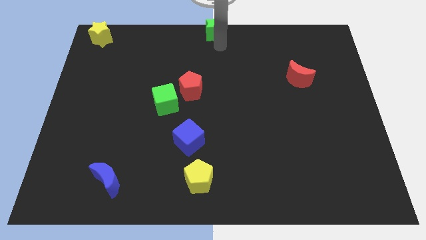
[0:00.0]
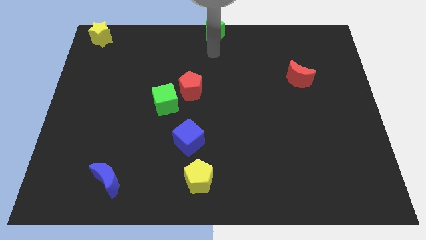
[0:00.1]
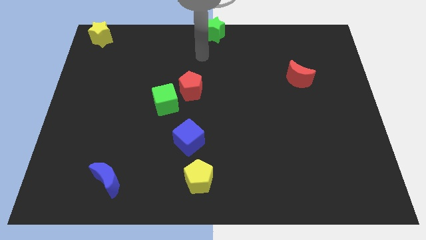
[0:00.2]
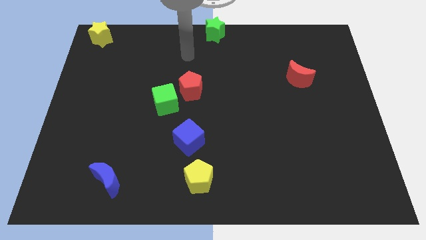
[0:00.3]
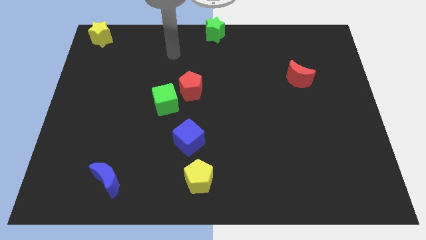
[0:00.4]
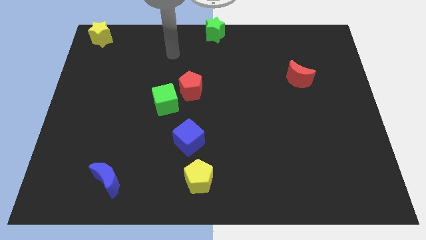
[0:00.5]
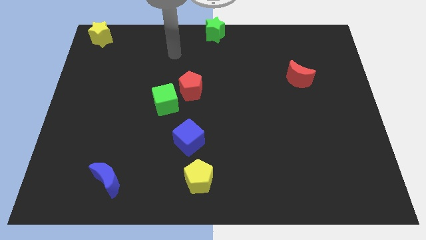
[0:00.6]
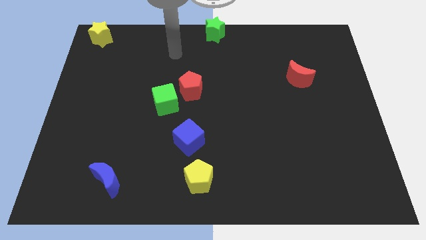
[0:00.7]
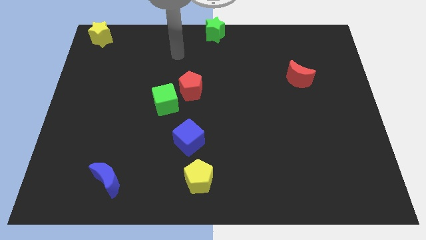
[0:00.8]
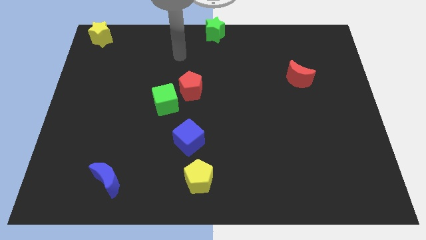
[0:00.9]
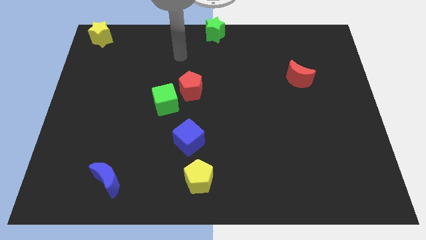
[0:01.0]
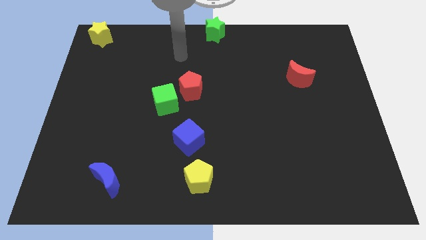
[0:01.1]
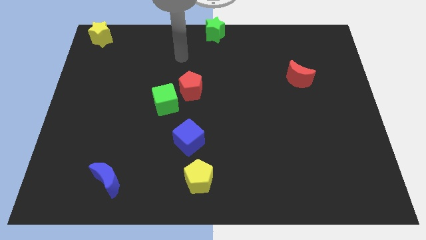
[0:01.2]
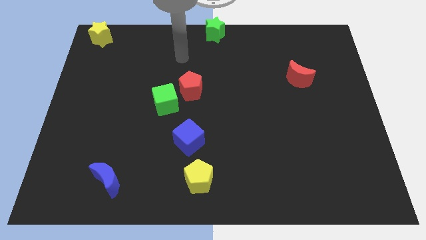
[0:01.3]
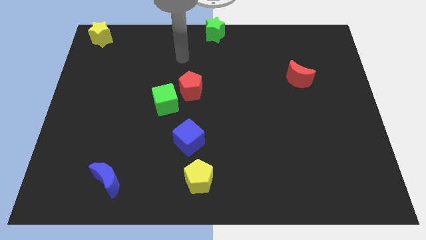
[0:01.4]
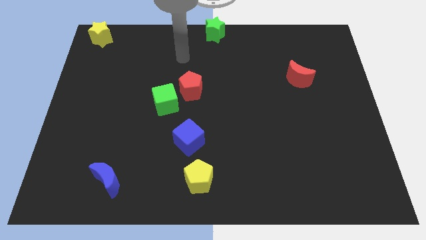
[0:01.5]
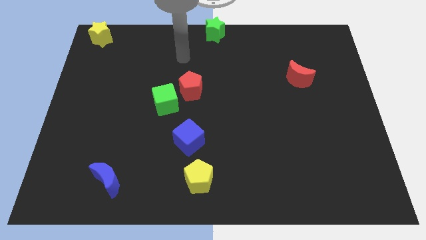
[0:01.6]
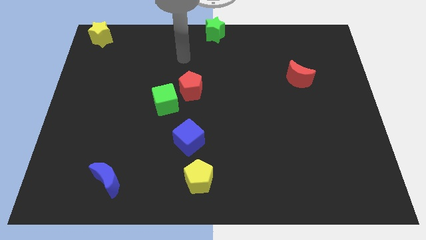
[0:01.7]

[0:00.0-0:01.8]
move your arm away from the green star

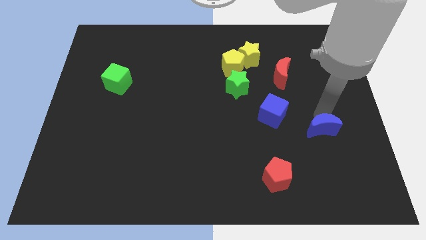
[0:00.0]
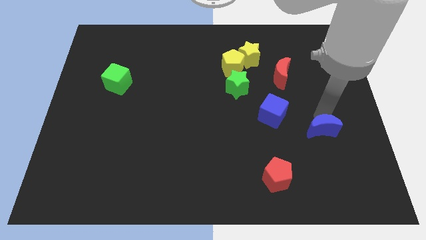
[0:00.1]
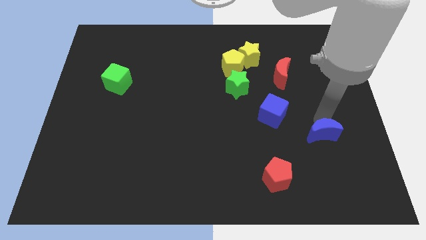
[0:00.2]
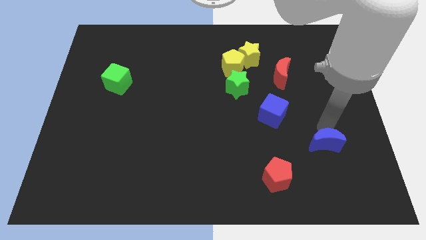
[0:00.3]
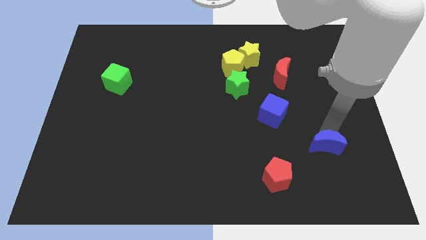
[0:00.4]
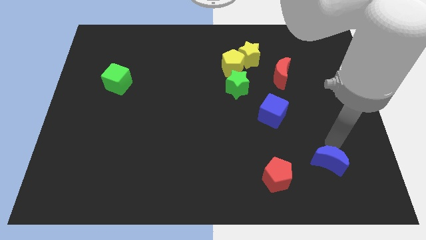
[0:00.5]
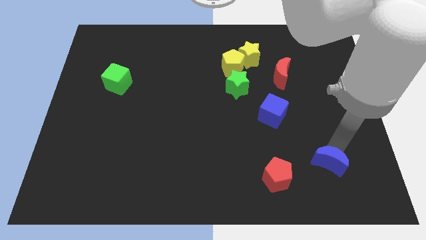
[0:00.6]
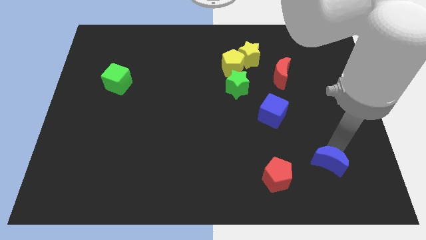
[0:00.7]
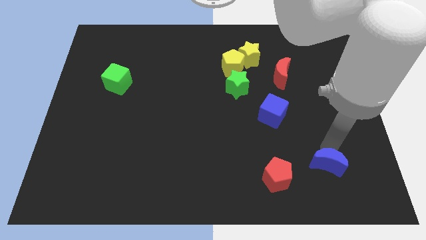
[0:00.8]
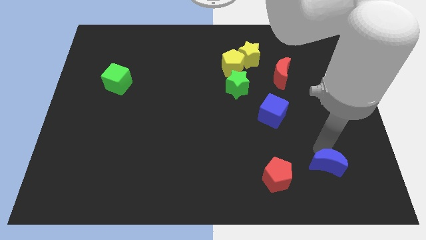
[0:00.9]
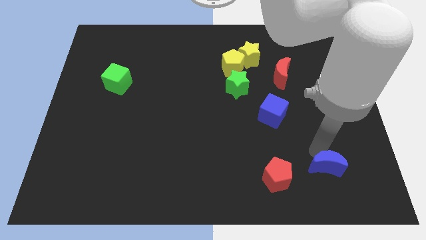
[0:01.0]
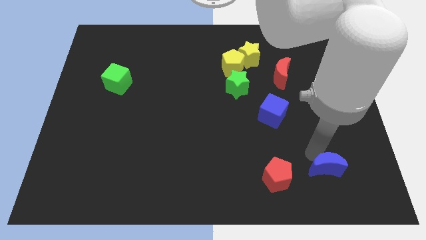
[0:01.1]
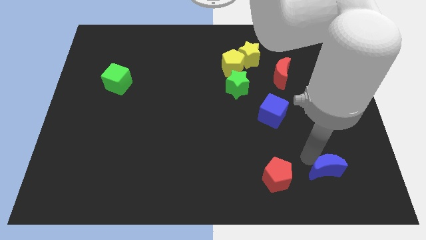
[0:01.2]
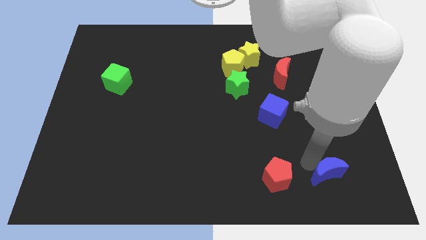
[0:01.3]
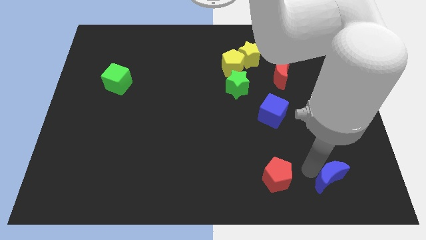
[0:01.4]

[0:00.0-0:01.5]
place the blue moon to the right of the red pentagon

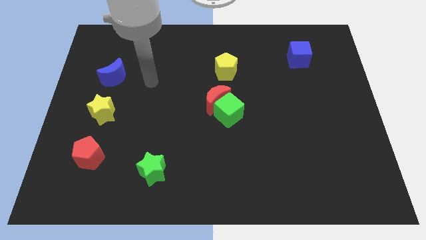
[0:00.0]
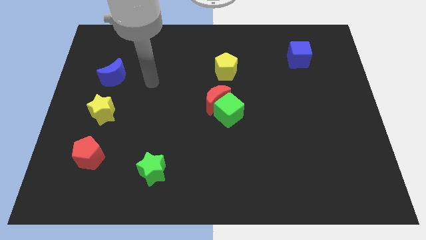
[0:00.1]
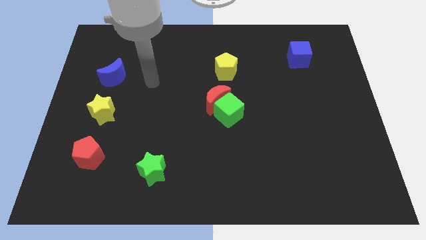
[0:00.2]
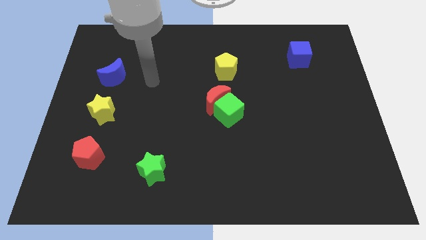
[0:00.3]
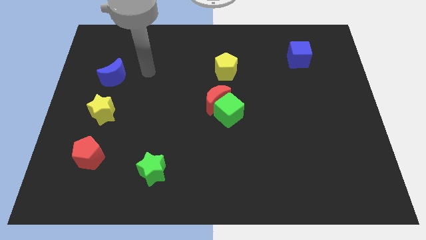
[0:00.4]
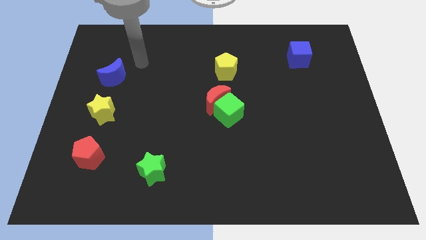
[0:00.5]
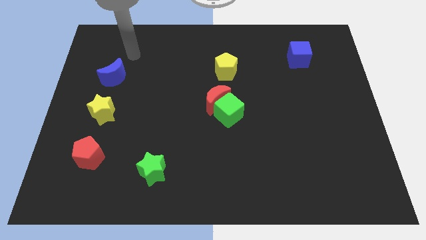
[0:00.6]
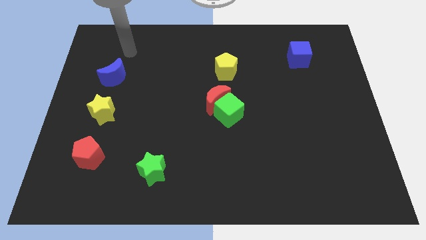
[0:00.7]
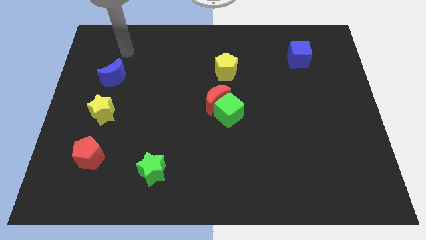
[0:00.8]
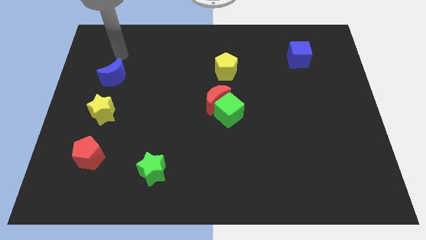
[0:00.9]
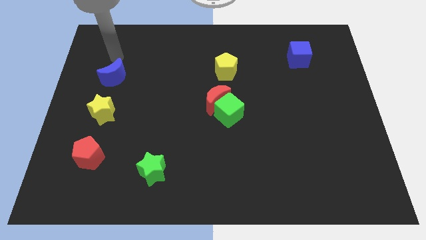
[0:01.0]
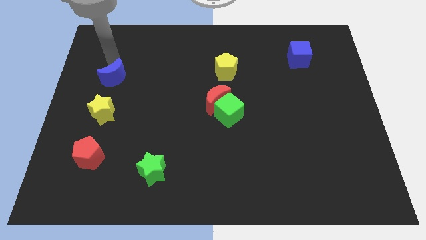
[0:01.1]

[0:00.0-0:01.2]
place your arm above blue moon

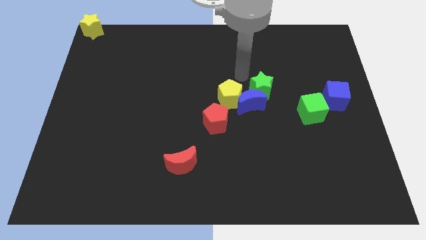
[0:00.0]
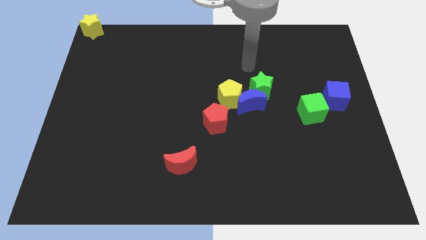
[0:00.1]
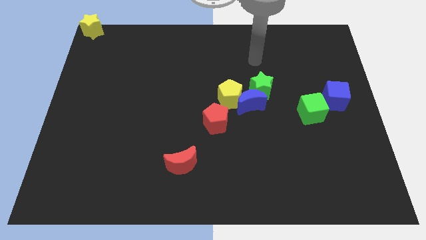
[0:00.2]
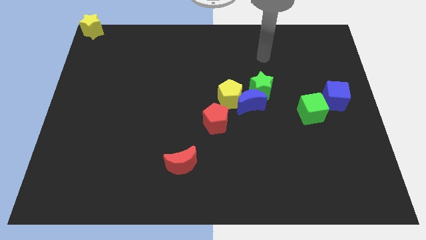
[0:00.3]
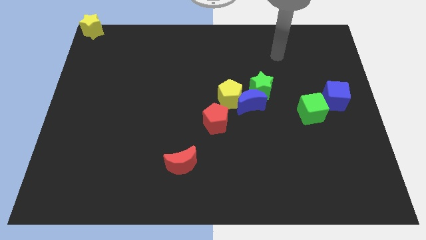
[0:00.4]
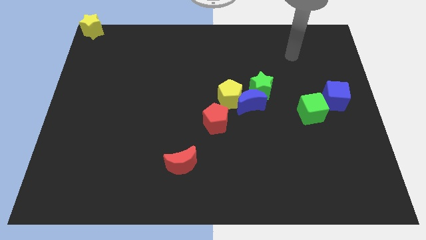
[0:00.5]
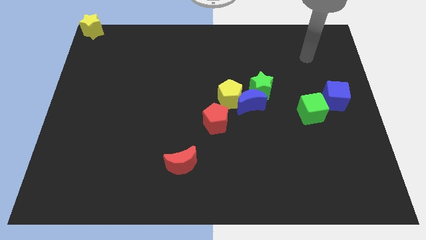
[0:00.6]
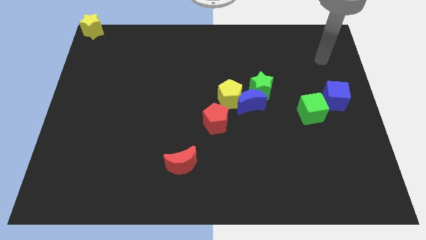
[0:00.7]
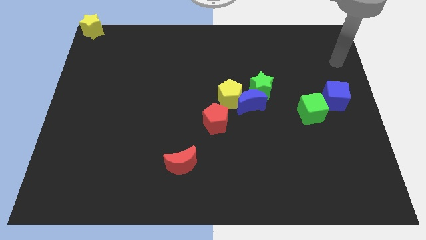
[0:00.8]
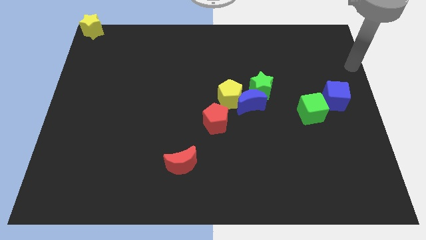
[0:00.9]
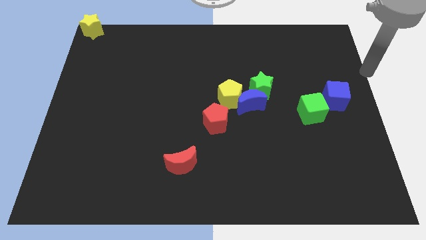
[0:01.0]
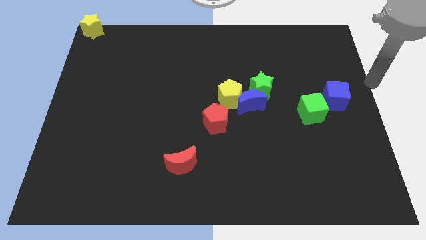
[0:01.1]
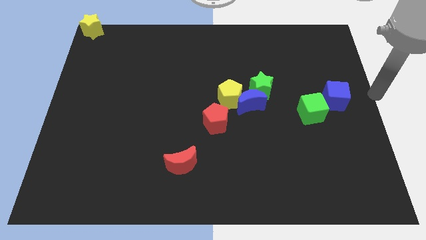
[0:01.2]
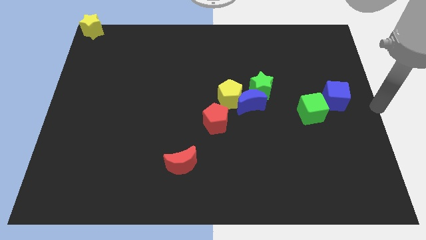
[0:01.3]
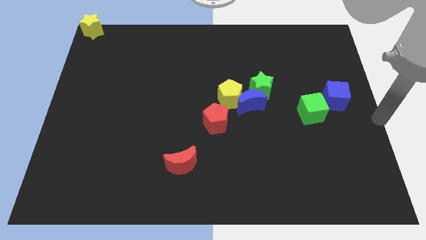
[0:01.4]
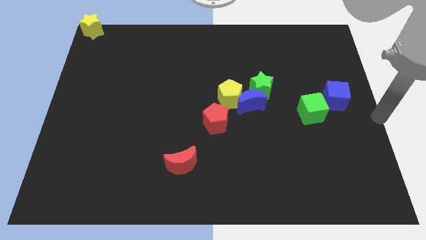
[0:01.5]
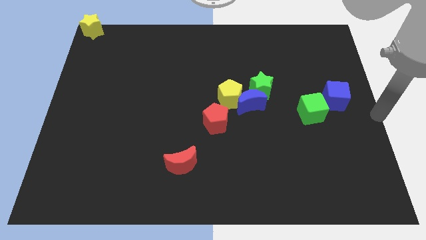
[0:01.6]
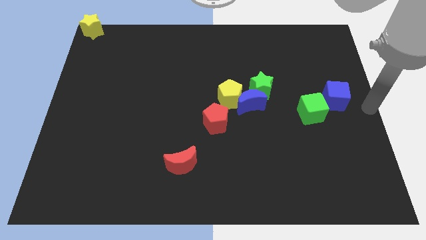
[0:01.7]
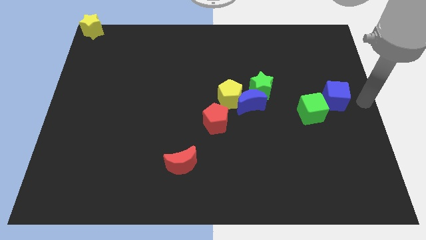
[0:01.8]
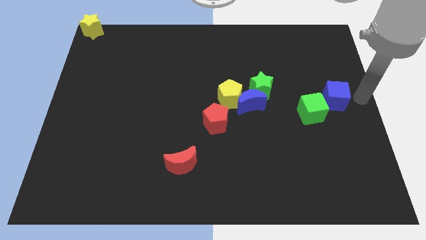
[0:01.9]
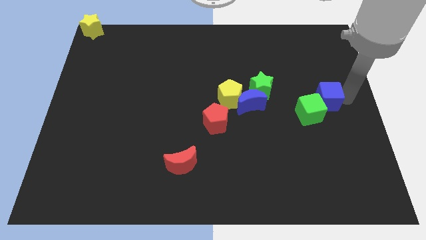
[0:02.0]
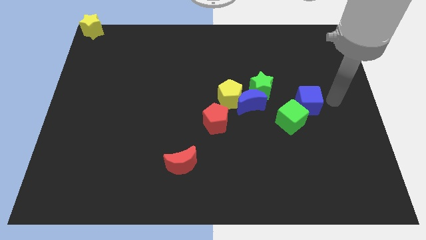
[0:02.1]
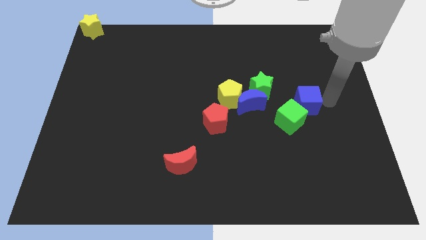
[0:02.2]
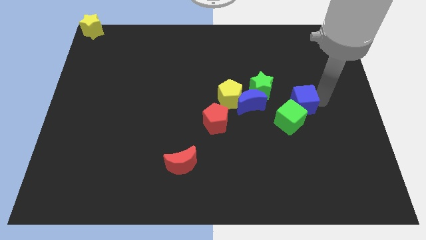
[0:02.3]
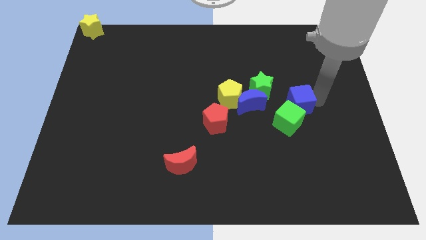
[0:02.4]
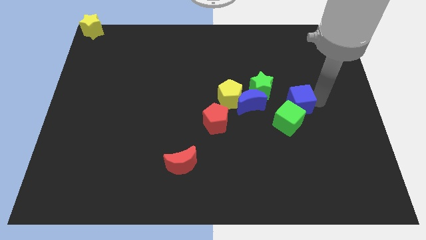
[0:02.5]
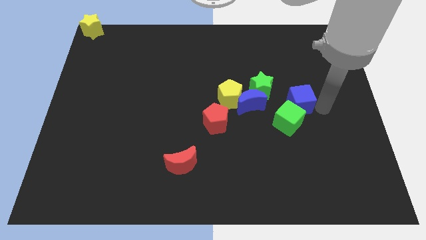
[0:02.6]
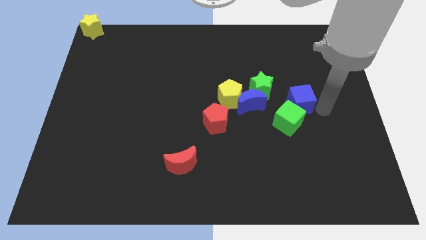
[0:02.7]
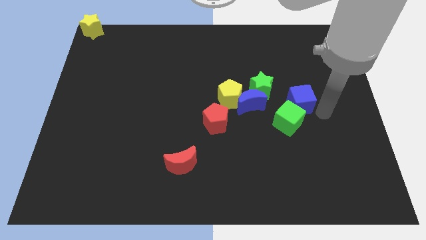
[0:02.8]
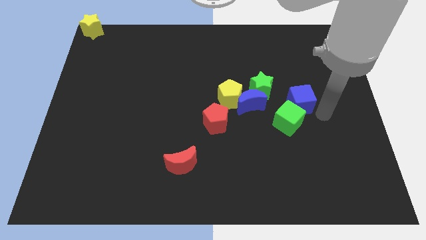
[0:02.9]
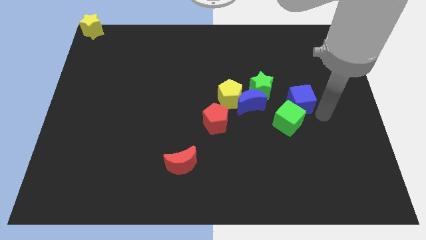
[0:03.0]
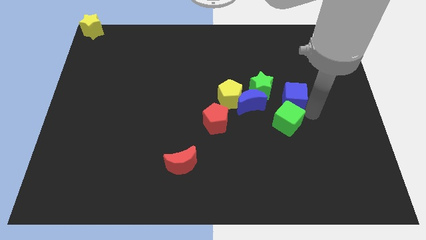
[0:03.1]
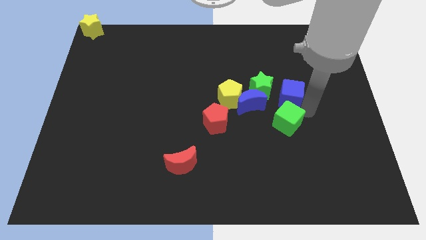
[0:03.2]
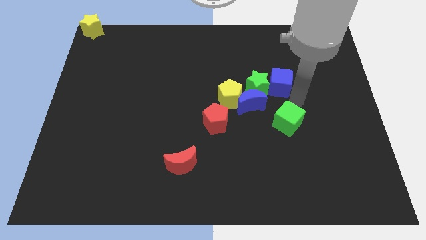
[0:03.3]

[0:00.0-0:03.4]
place the blue cube to the top side of the of the green cube

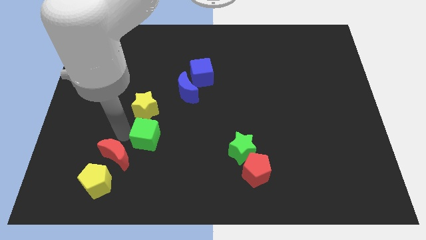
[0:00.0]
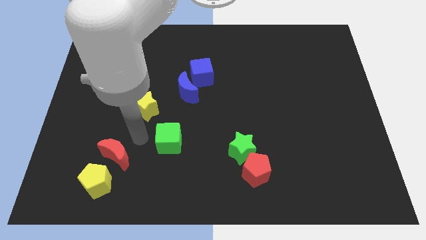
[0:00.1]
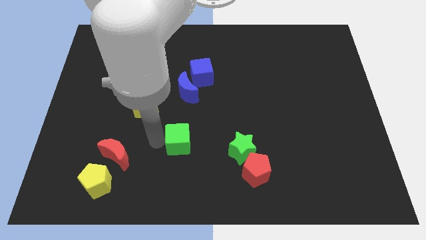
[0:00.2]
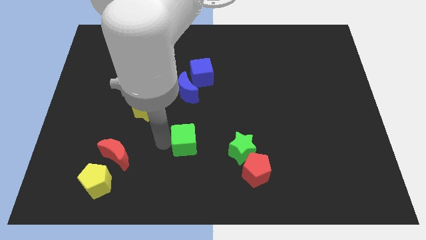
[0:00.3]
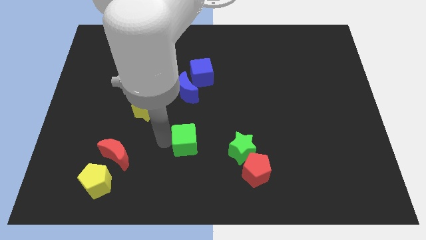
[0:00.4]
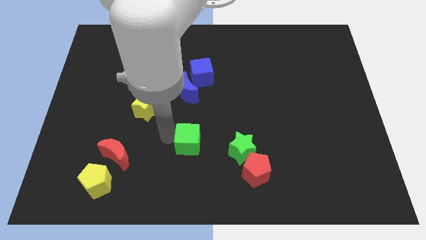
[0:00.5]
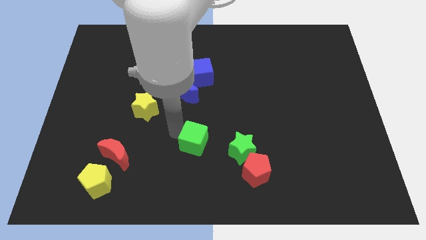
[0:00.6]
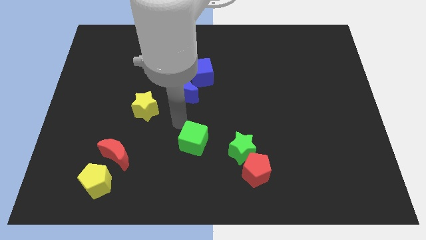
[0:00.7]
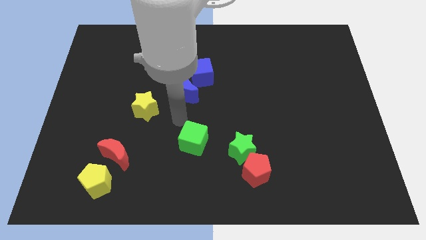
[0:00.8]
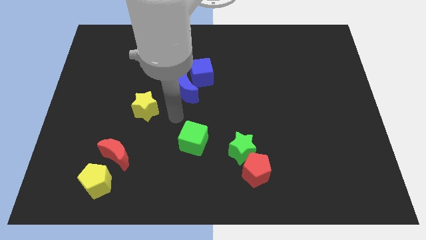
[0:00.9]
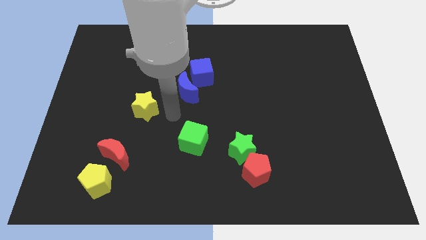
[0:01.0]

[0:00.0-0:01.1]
place green cube below blue crescent

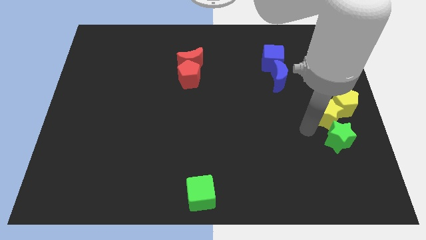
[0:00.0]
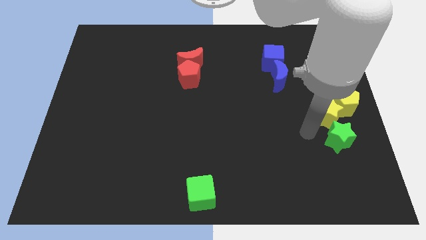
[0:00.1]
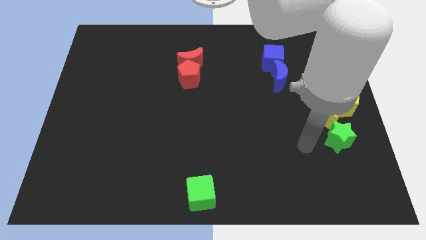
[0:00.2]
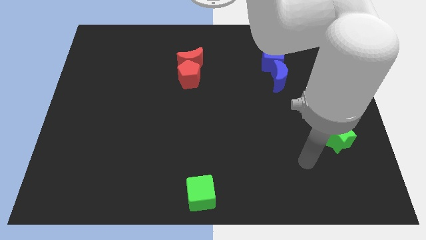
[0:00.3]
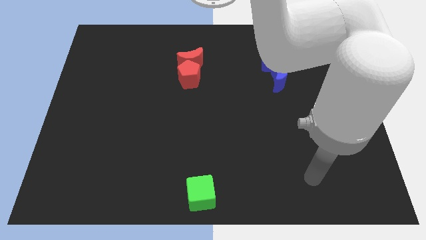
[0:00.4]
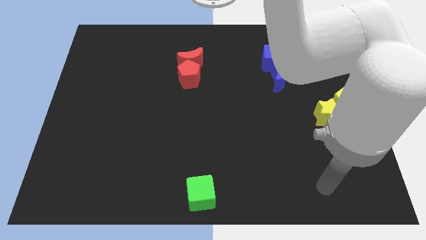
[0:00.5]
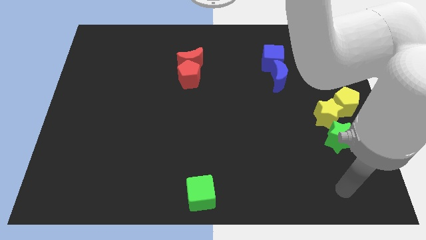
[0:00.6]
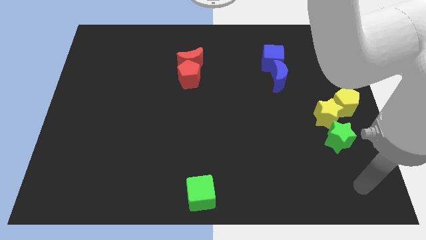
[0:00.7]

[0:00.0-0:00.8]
go away from the yellow star
